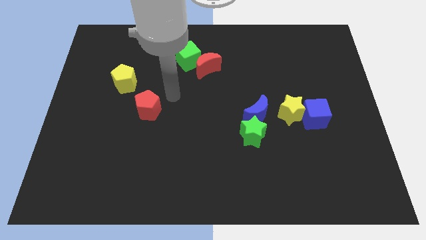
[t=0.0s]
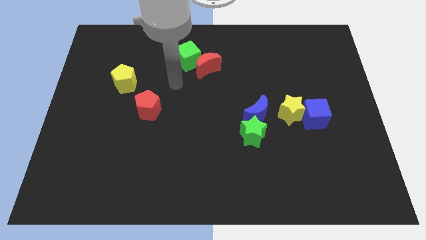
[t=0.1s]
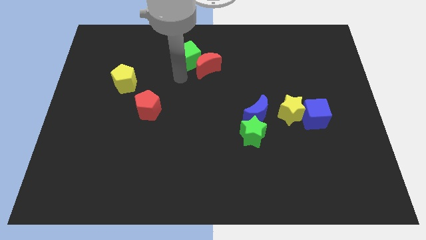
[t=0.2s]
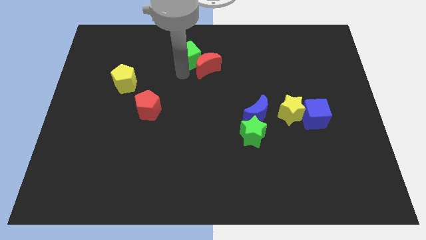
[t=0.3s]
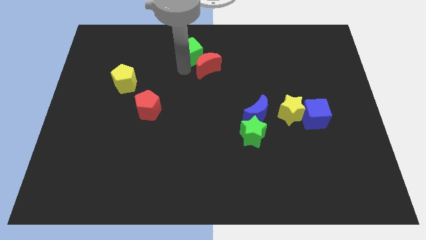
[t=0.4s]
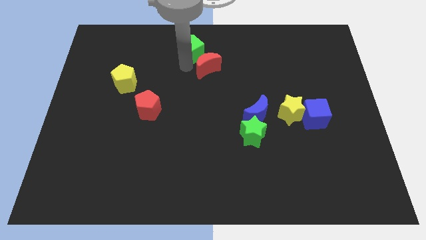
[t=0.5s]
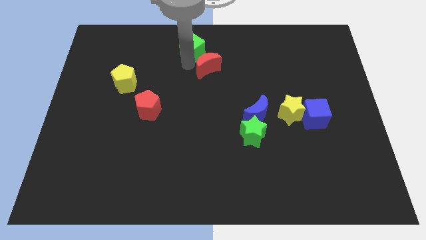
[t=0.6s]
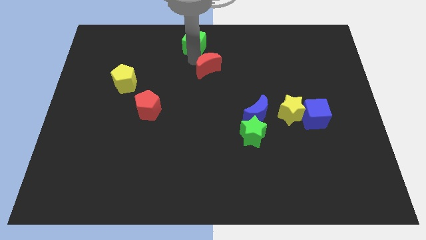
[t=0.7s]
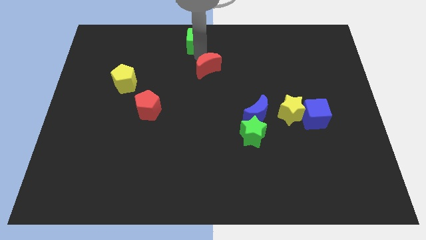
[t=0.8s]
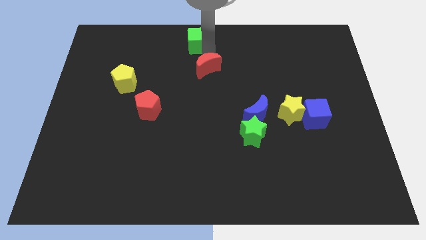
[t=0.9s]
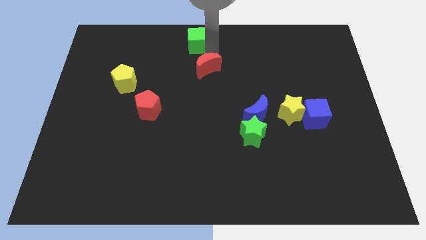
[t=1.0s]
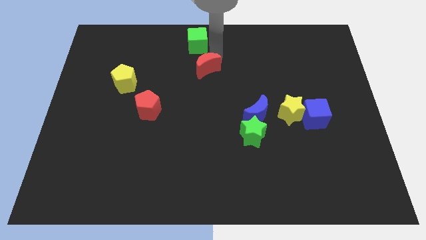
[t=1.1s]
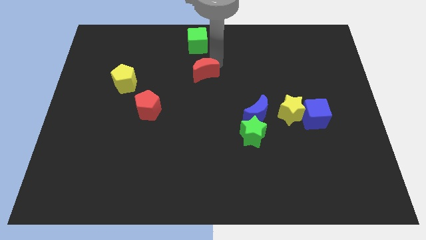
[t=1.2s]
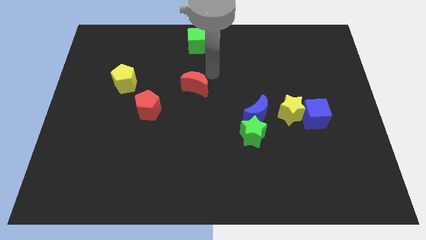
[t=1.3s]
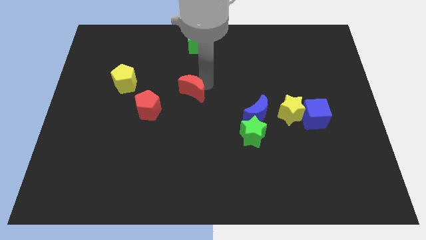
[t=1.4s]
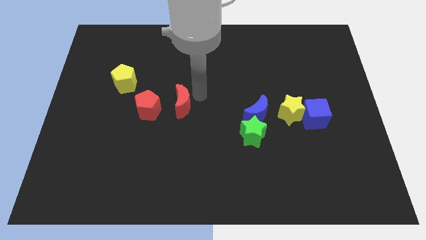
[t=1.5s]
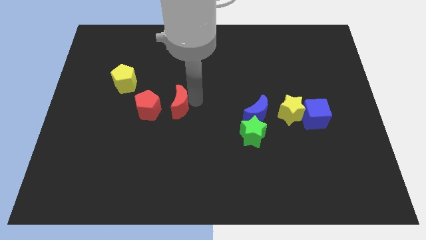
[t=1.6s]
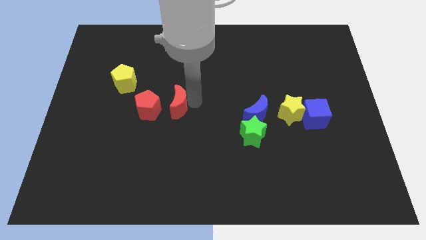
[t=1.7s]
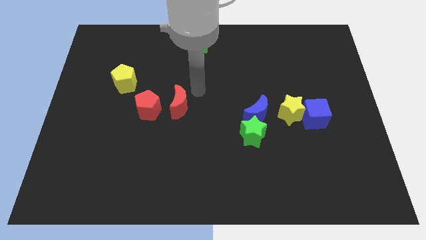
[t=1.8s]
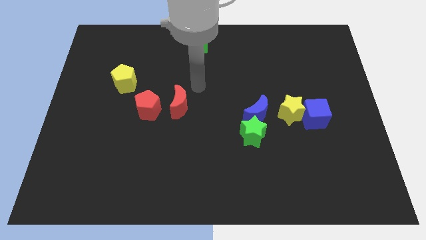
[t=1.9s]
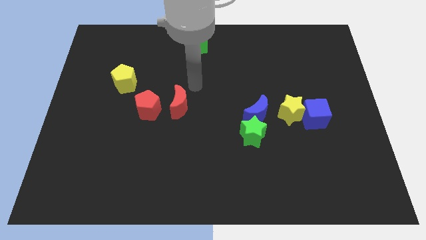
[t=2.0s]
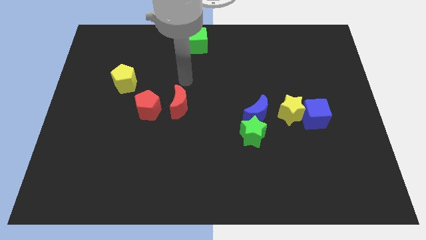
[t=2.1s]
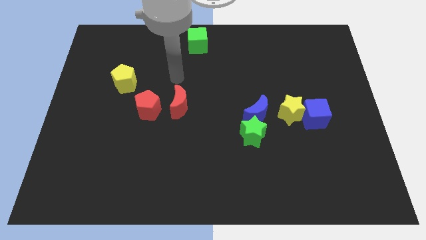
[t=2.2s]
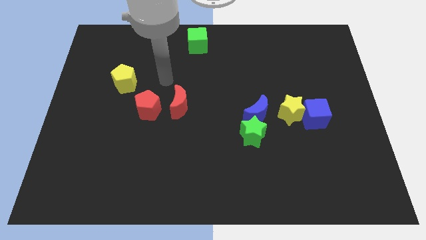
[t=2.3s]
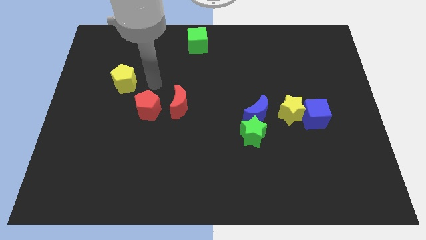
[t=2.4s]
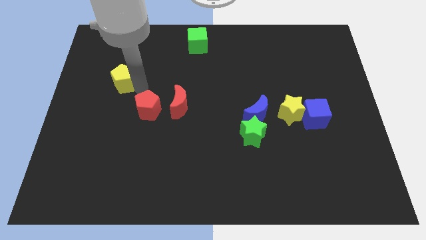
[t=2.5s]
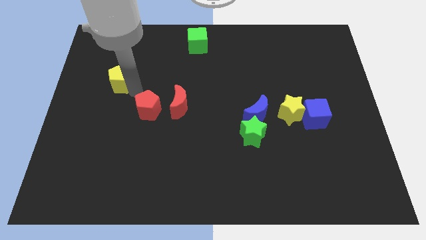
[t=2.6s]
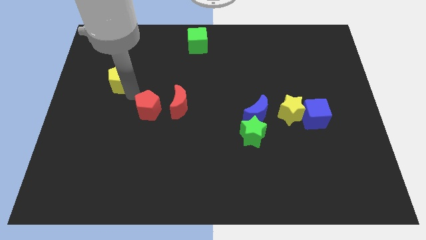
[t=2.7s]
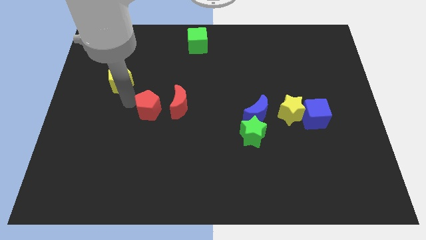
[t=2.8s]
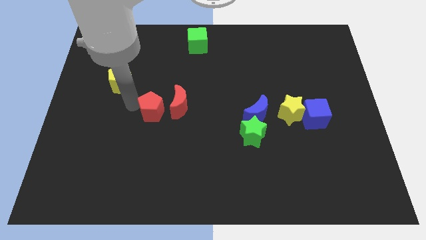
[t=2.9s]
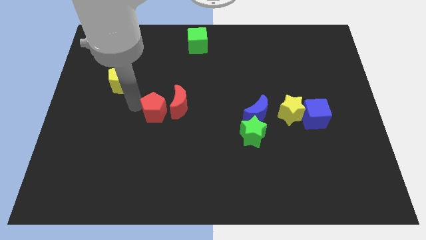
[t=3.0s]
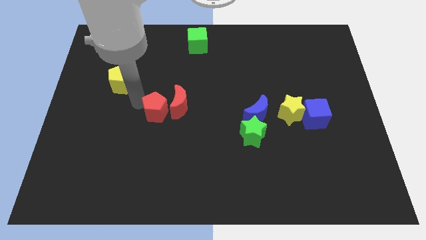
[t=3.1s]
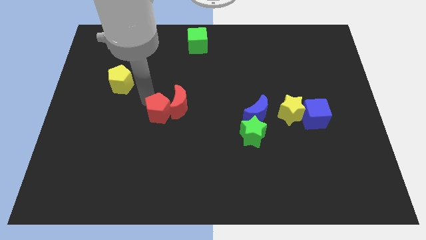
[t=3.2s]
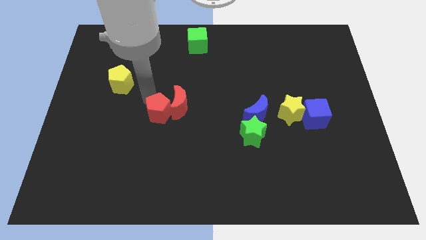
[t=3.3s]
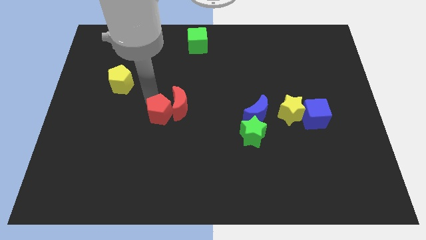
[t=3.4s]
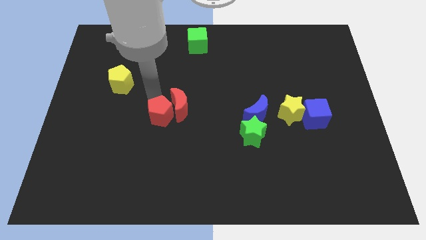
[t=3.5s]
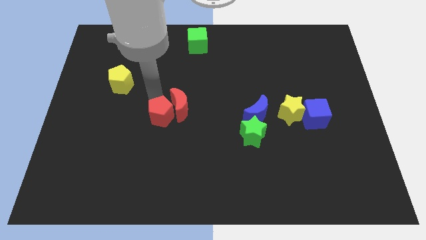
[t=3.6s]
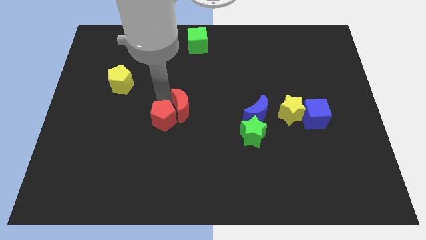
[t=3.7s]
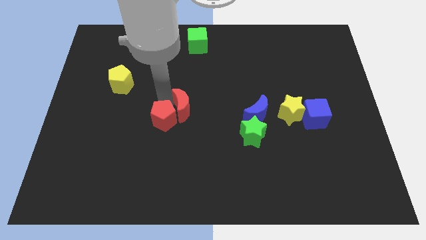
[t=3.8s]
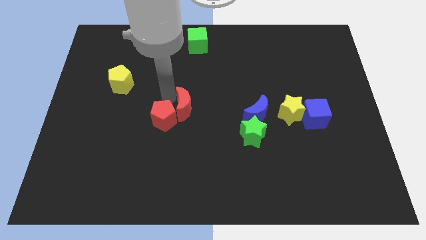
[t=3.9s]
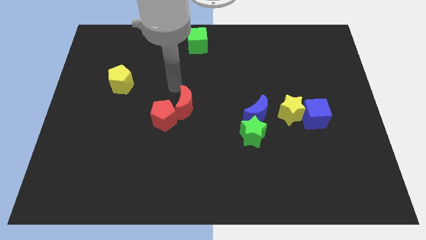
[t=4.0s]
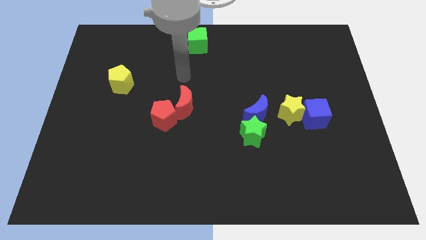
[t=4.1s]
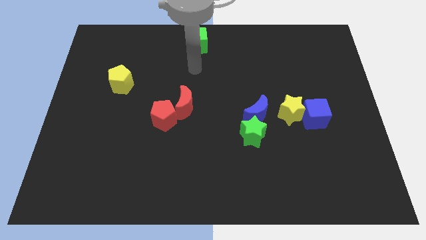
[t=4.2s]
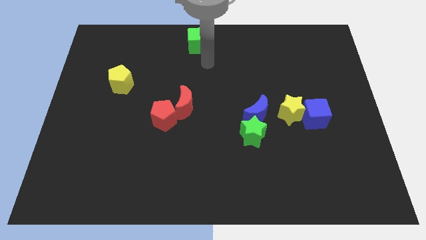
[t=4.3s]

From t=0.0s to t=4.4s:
join red blocks together

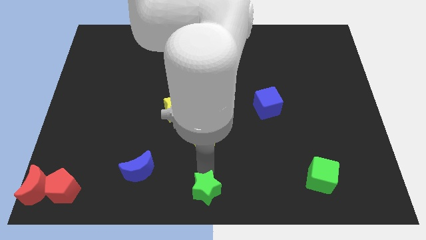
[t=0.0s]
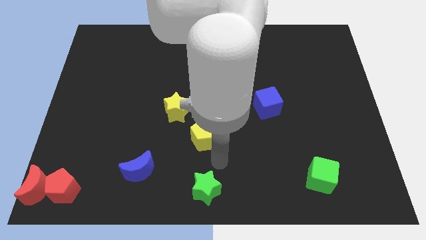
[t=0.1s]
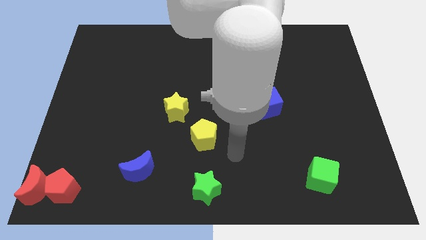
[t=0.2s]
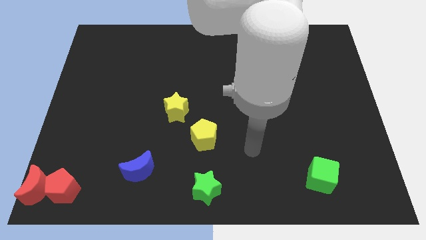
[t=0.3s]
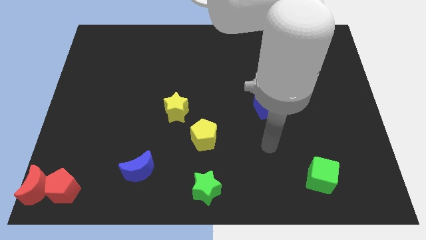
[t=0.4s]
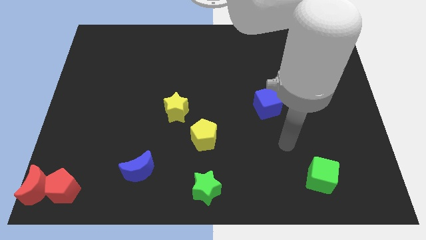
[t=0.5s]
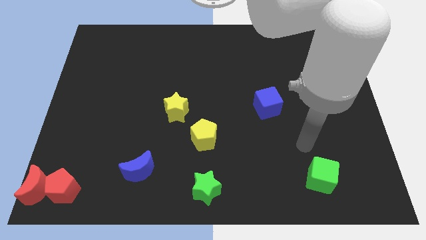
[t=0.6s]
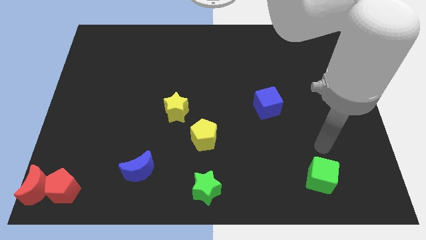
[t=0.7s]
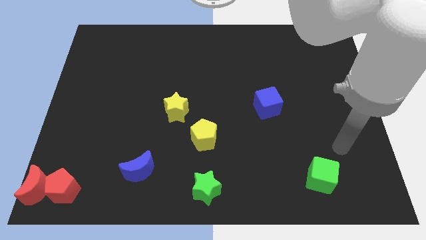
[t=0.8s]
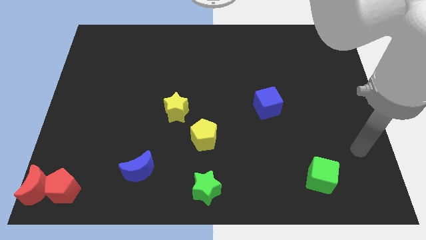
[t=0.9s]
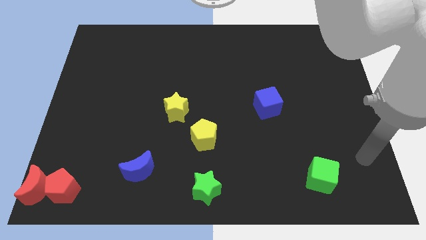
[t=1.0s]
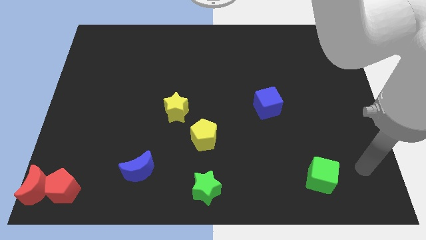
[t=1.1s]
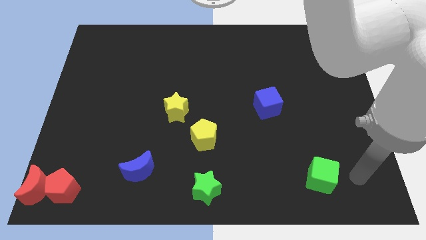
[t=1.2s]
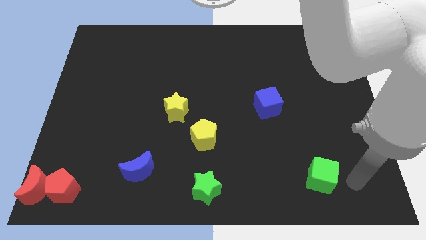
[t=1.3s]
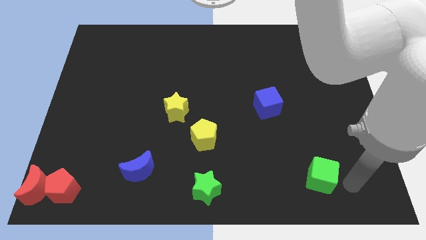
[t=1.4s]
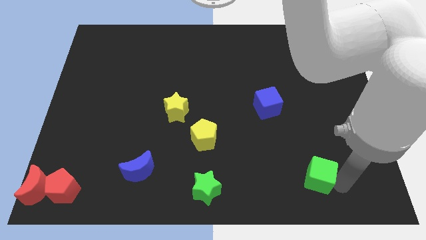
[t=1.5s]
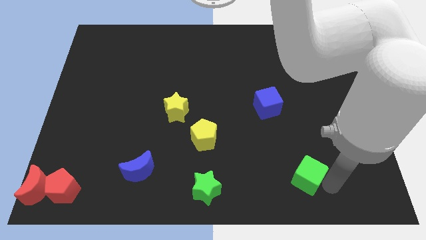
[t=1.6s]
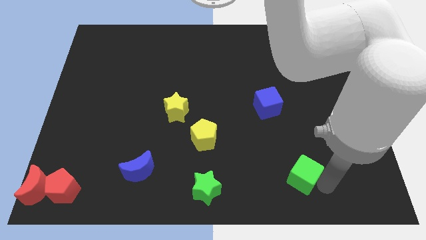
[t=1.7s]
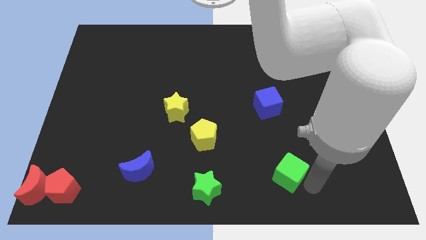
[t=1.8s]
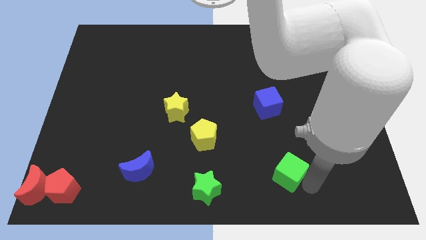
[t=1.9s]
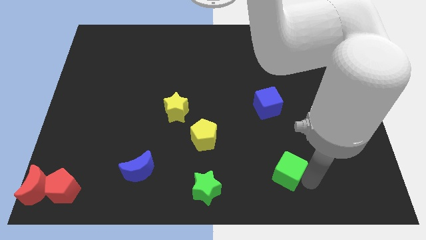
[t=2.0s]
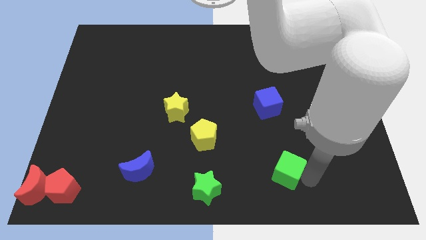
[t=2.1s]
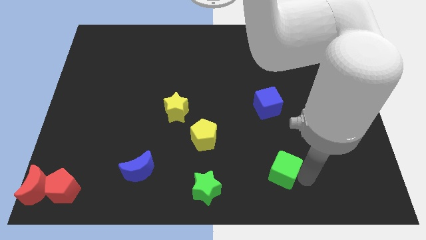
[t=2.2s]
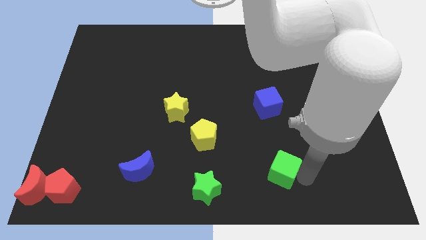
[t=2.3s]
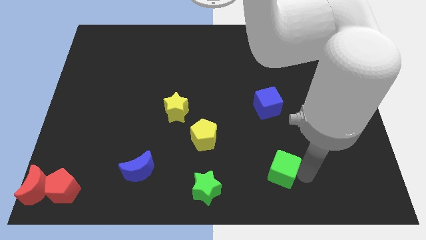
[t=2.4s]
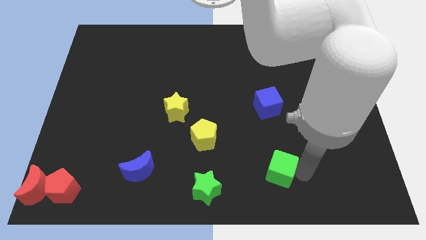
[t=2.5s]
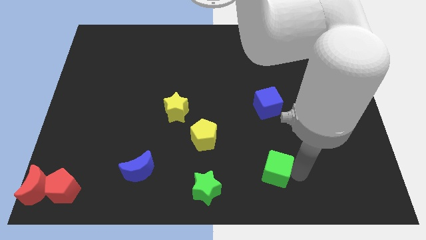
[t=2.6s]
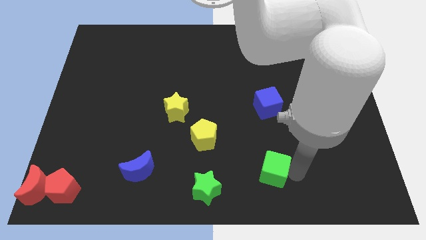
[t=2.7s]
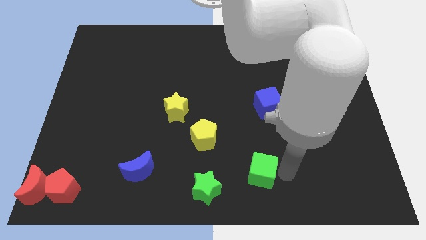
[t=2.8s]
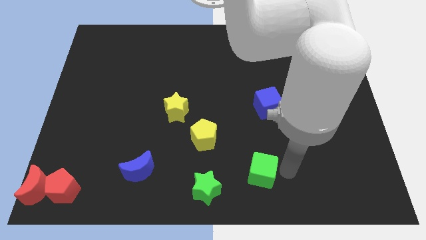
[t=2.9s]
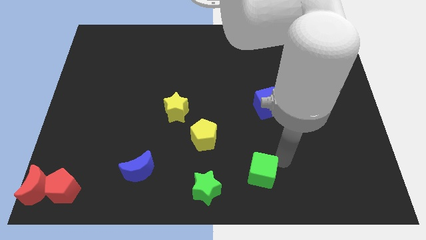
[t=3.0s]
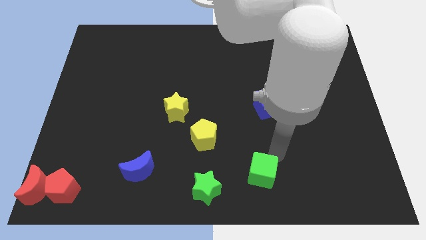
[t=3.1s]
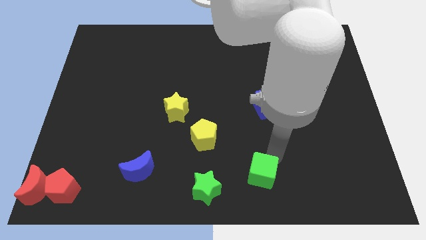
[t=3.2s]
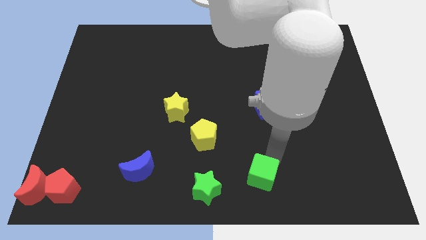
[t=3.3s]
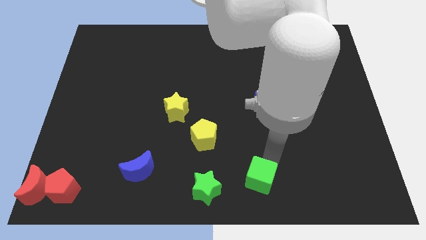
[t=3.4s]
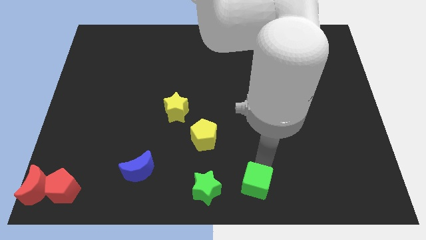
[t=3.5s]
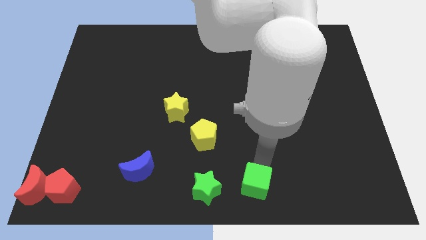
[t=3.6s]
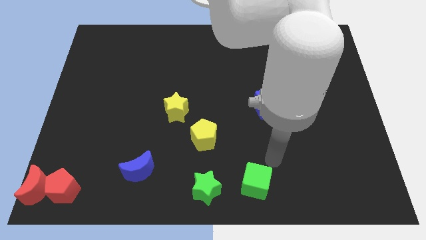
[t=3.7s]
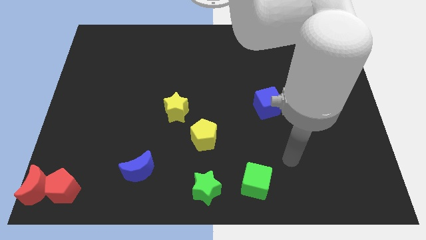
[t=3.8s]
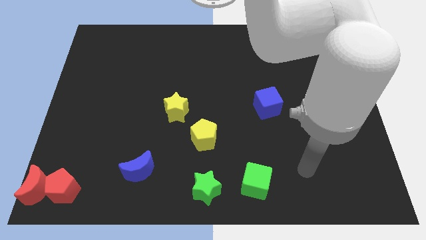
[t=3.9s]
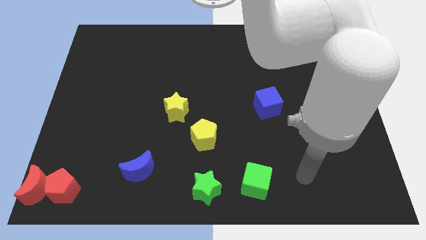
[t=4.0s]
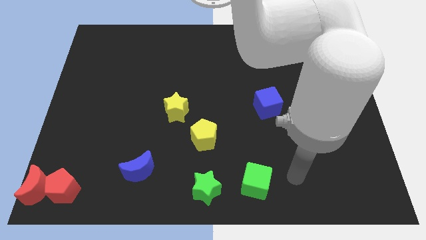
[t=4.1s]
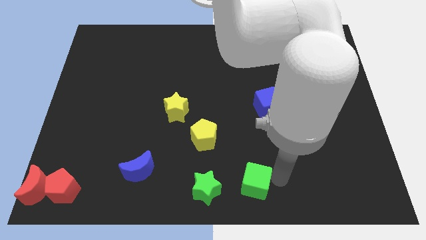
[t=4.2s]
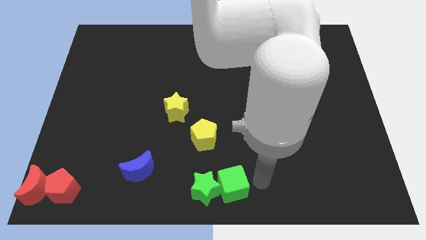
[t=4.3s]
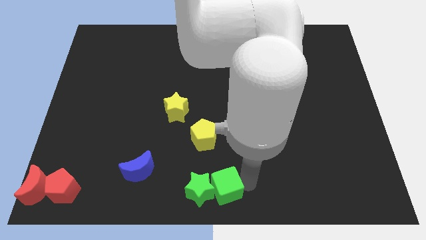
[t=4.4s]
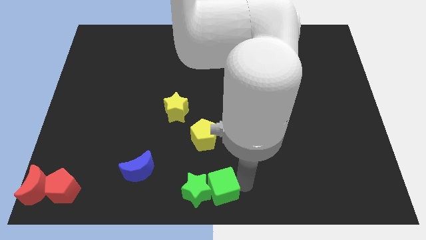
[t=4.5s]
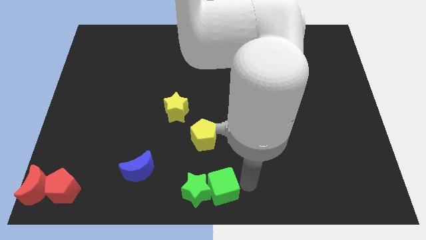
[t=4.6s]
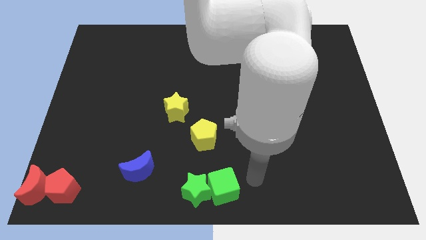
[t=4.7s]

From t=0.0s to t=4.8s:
push the green cube to the right of the green star
